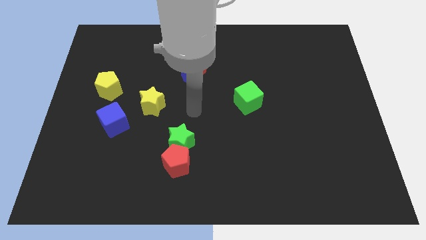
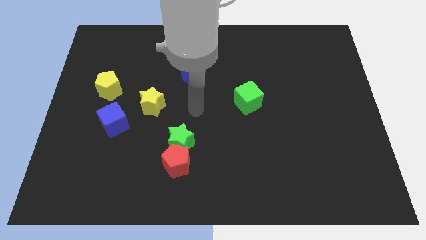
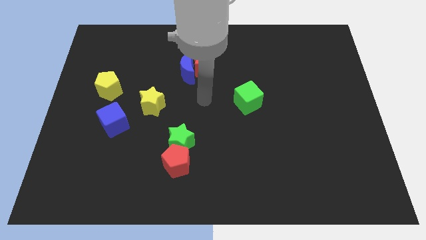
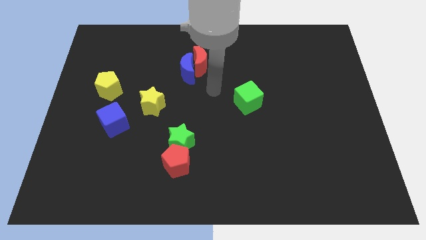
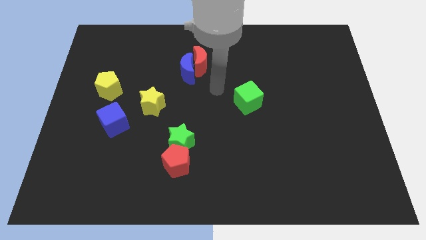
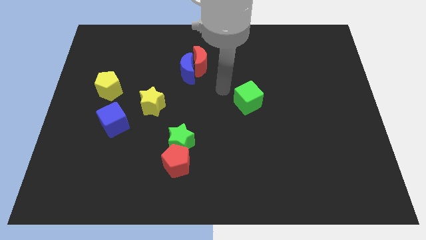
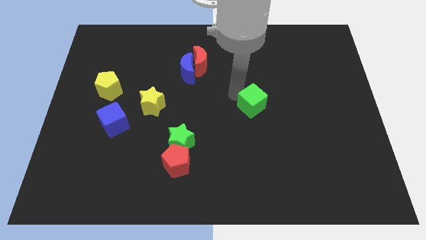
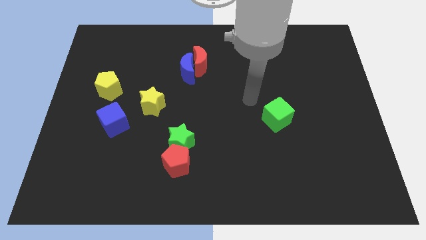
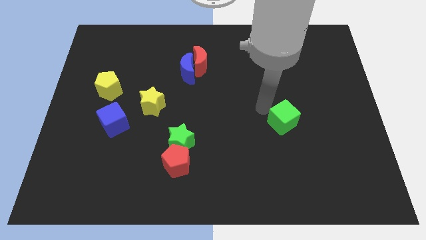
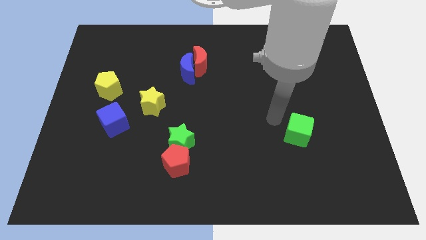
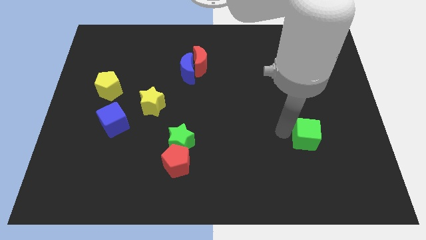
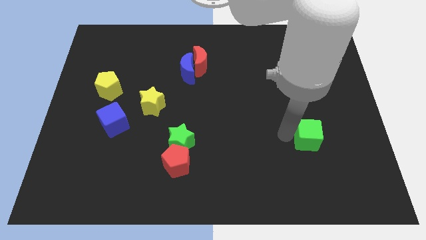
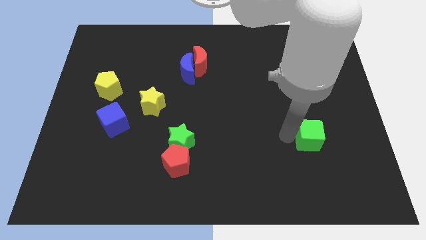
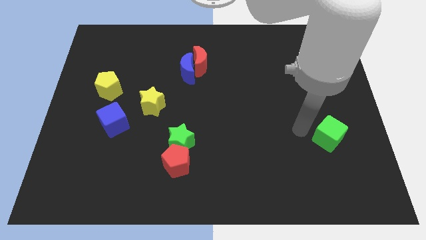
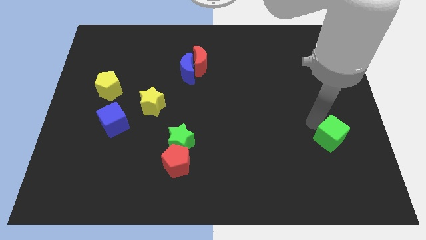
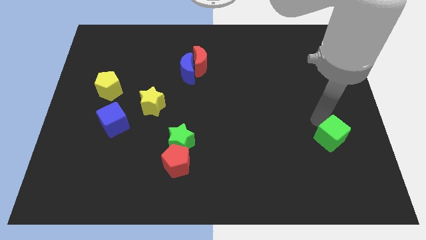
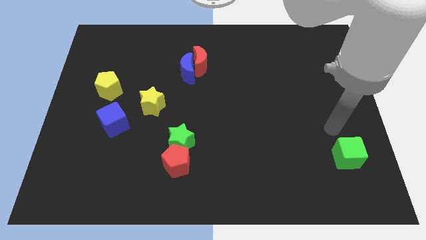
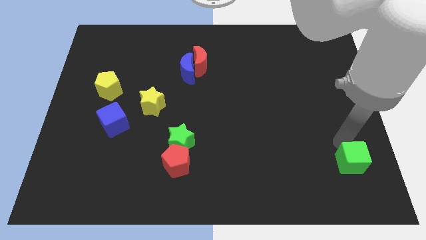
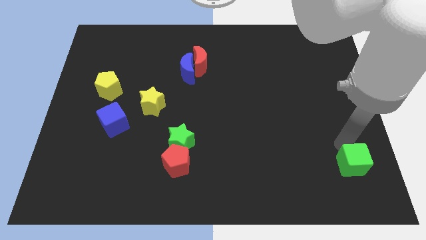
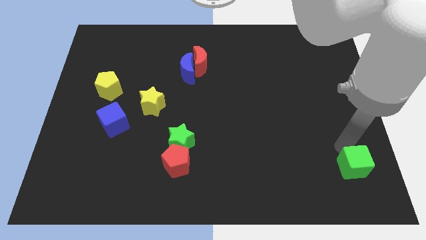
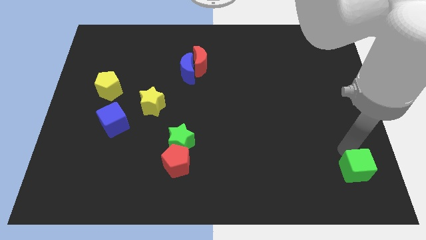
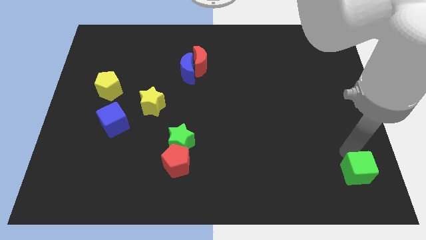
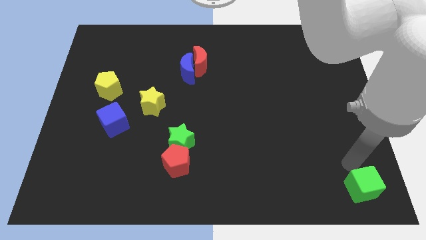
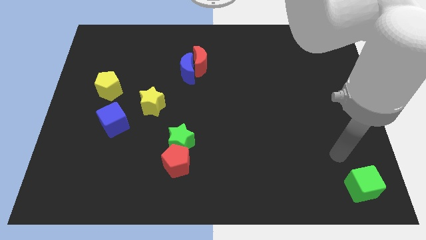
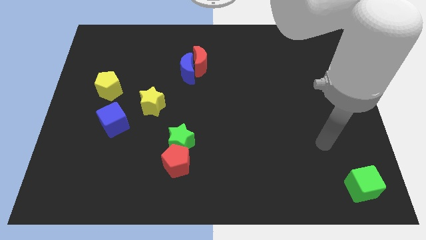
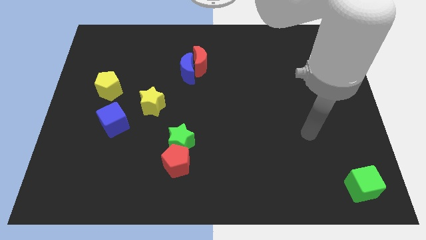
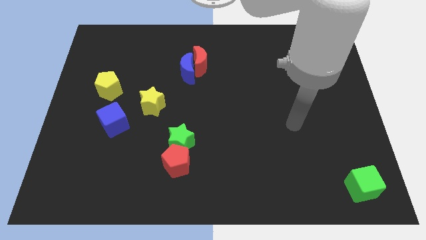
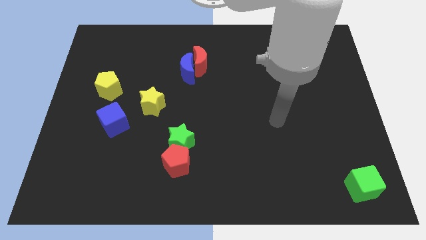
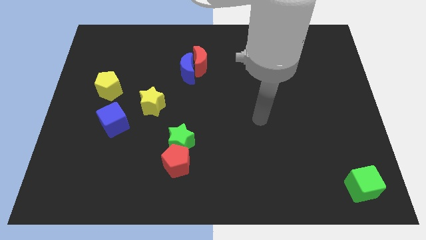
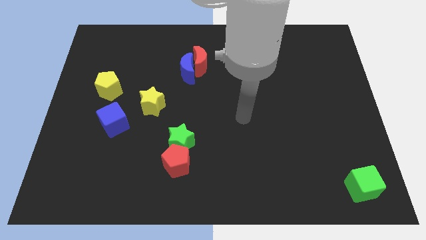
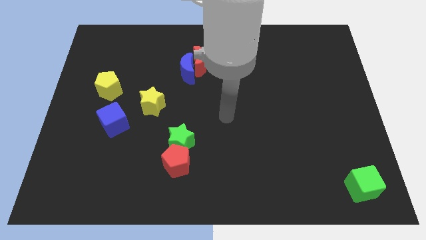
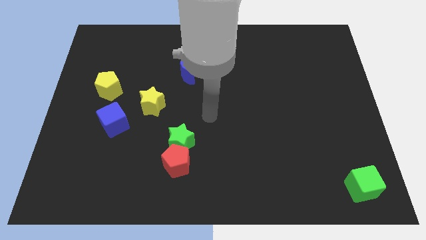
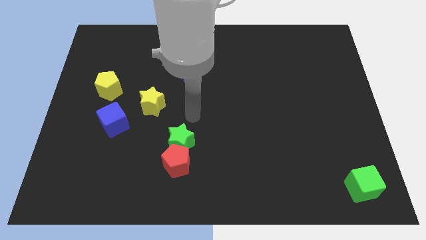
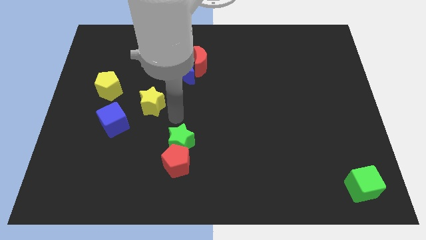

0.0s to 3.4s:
push the green cube to the bottom right corner of the board

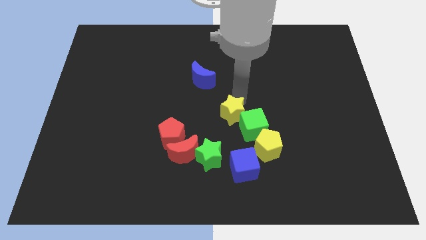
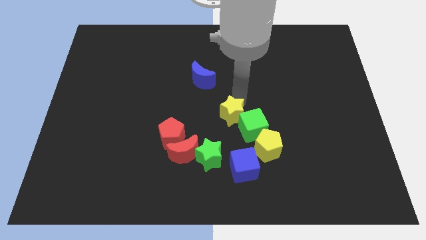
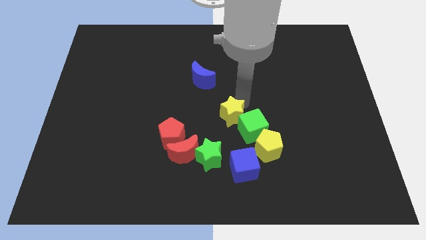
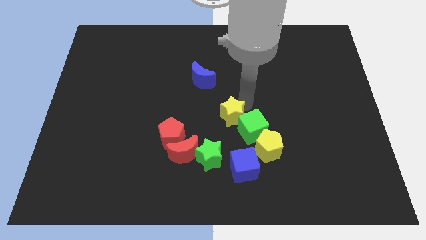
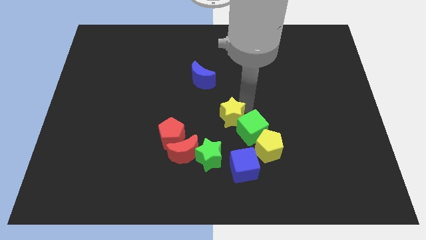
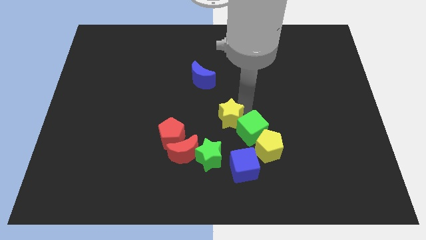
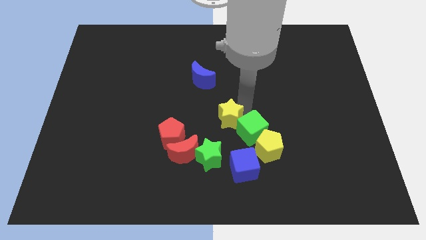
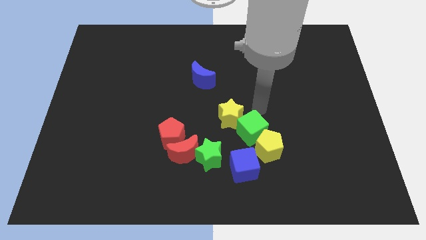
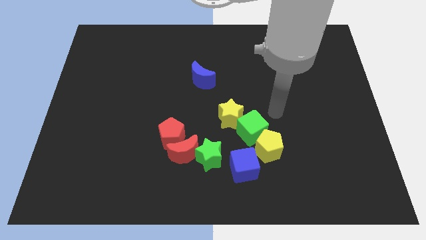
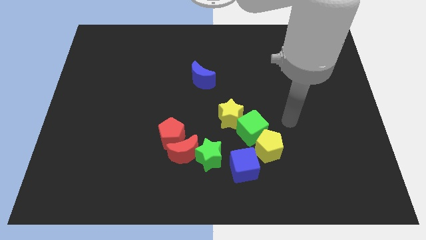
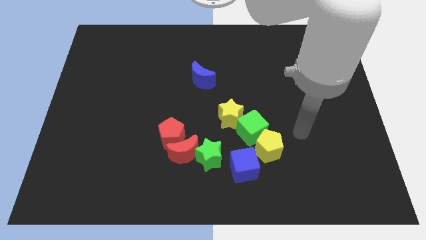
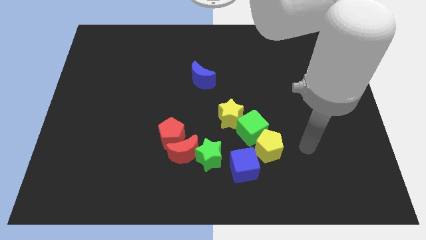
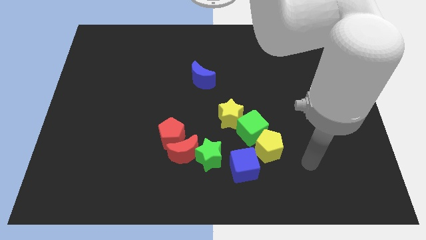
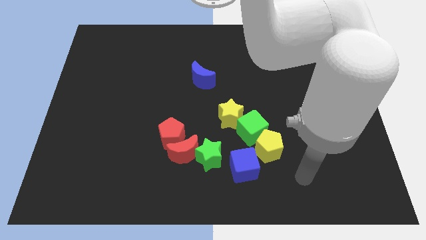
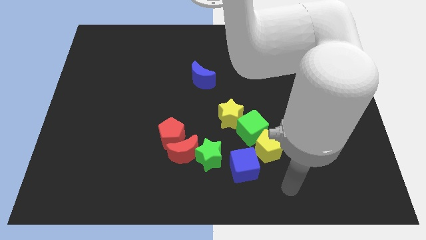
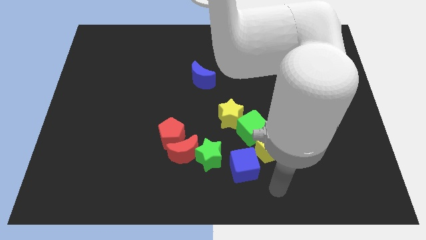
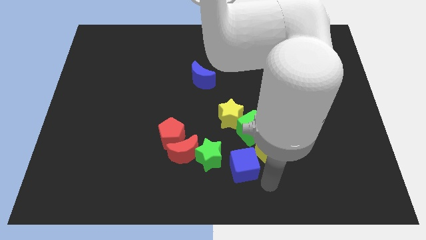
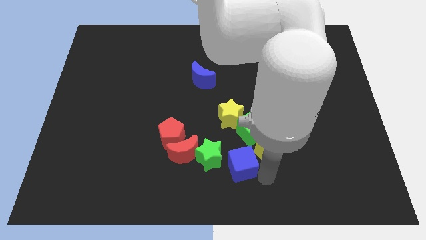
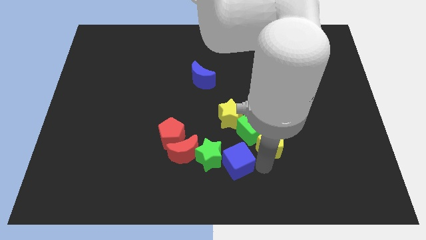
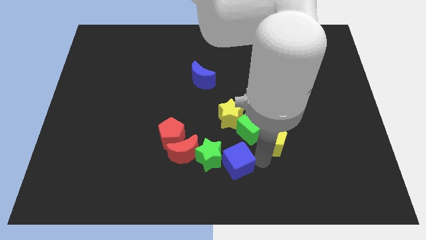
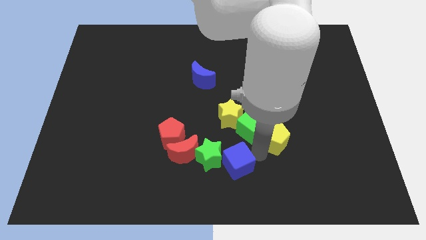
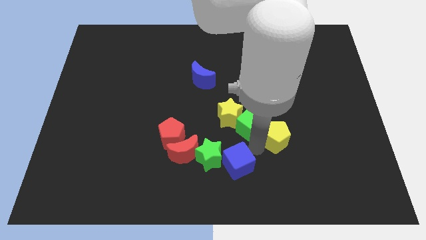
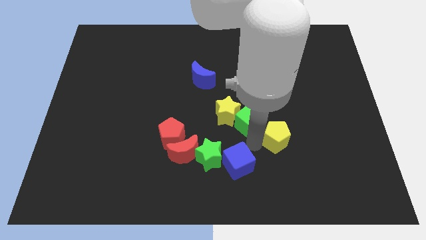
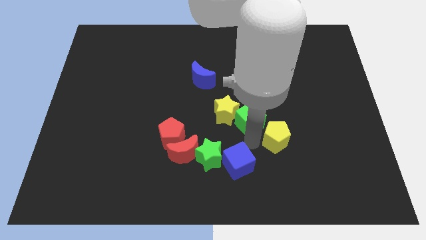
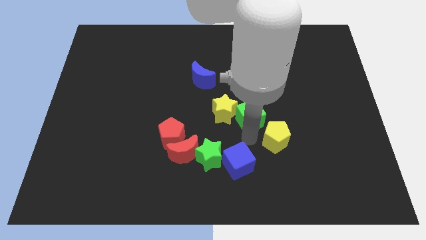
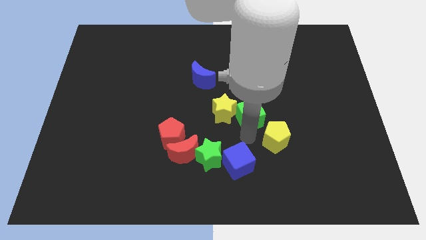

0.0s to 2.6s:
separate the blue cube and yellow pentagon

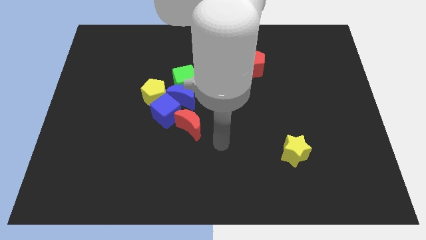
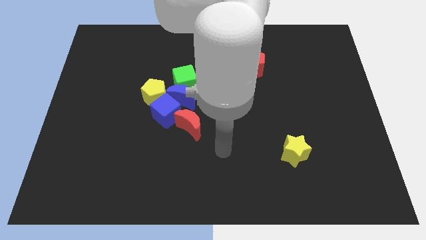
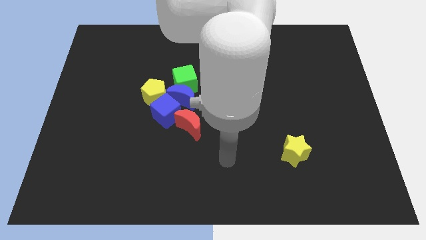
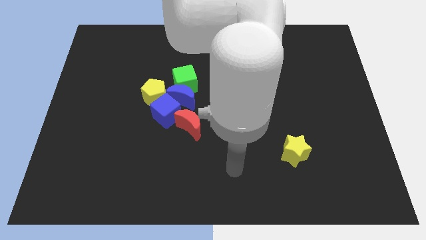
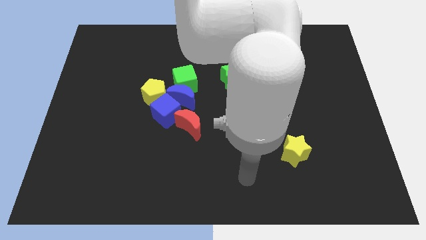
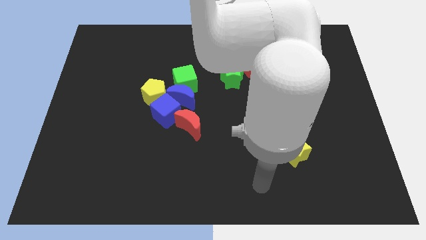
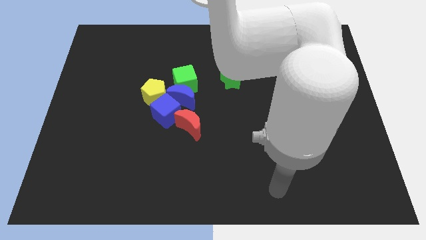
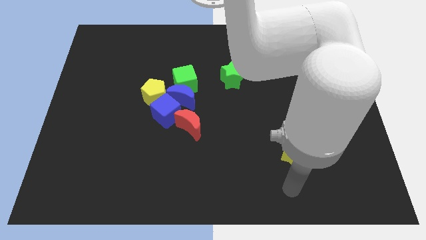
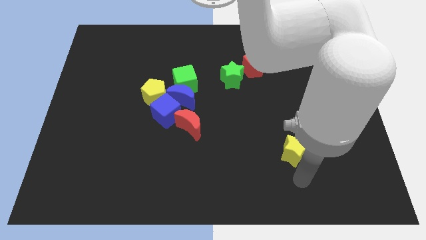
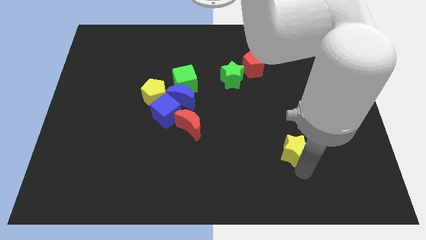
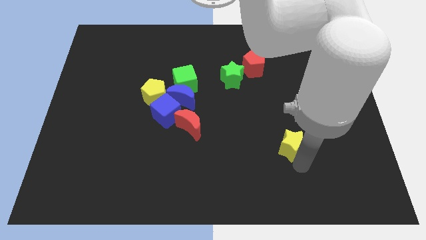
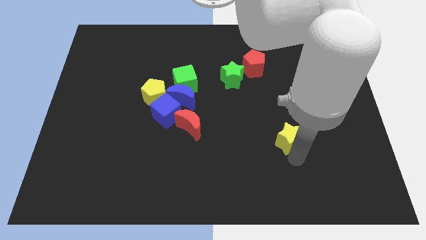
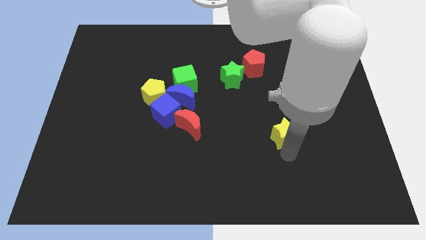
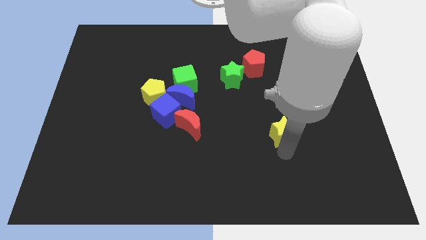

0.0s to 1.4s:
push the yellow star slightly upwards

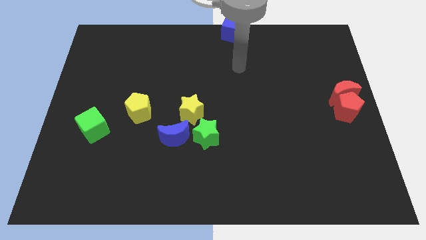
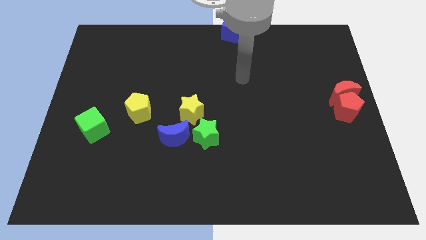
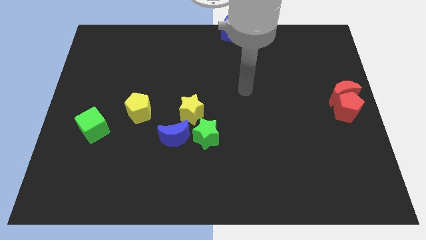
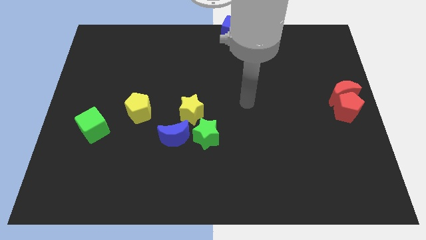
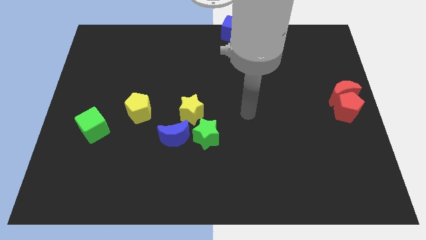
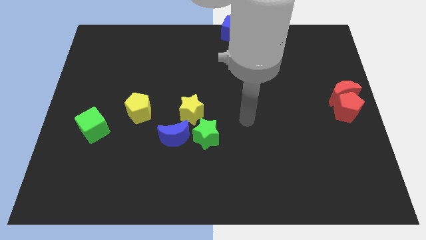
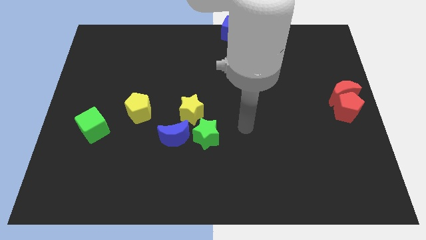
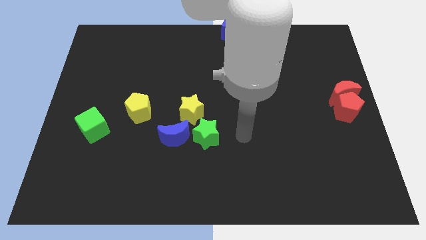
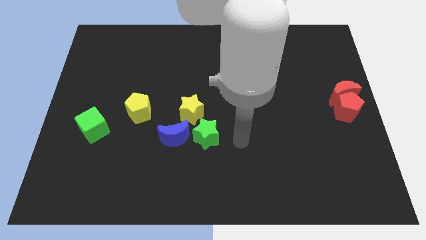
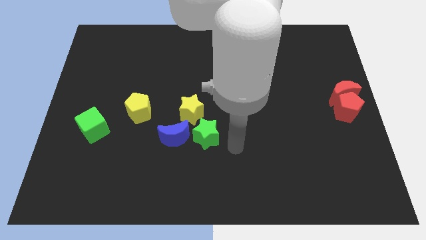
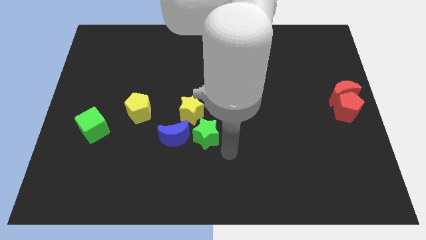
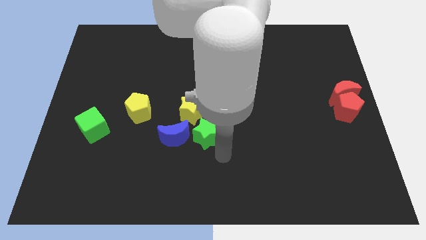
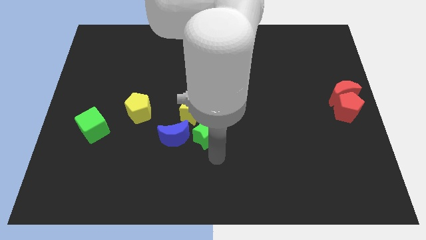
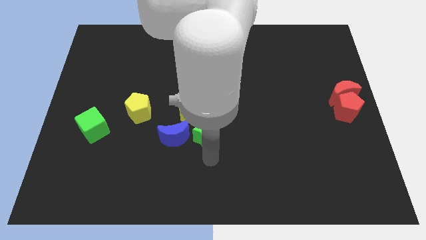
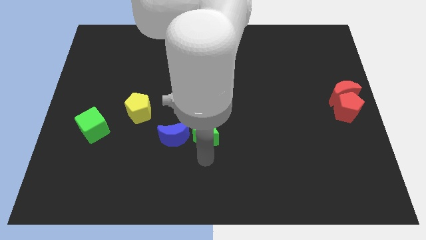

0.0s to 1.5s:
move your arm to the bottom of the green star
